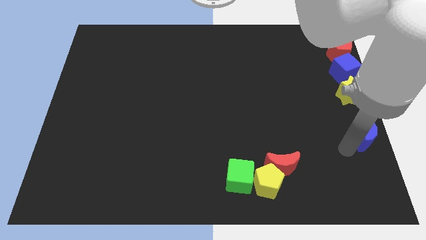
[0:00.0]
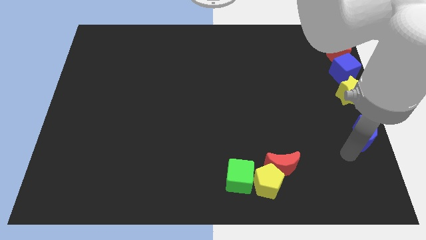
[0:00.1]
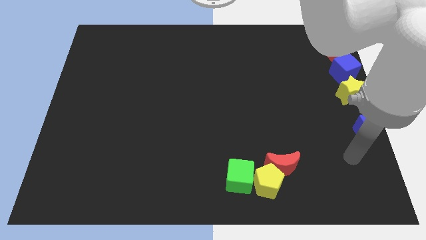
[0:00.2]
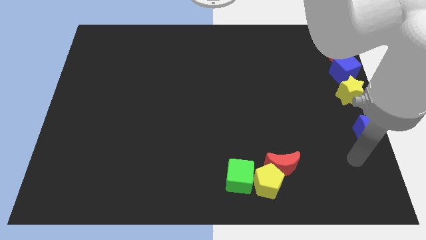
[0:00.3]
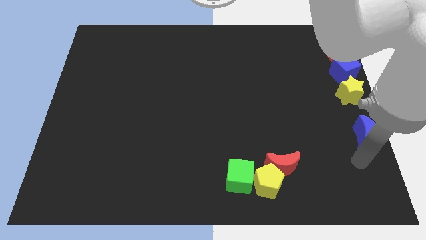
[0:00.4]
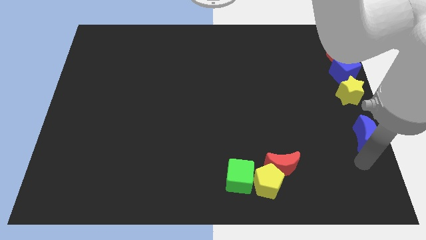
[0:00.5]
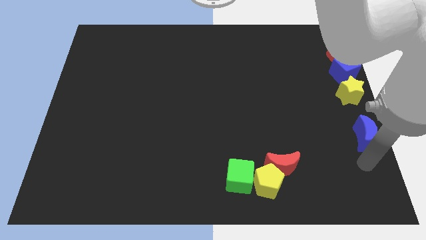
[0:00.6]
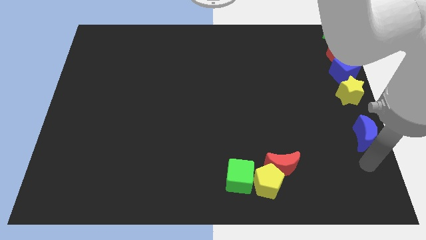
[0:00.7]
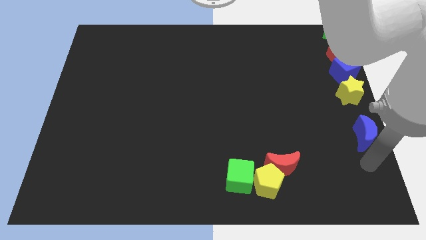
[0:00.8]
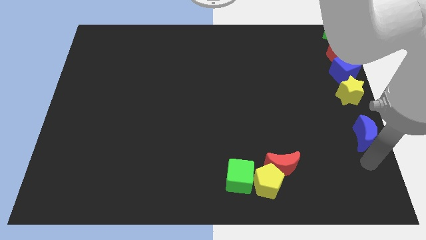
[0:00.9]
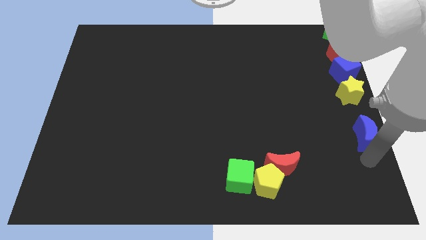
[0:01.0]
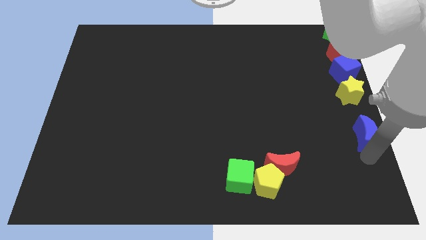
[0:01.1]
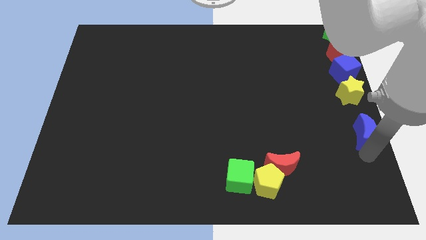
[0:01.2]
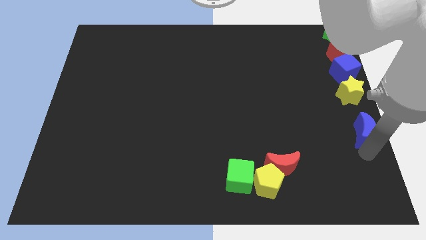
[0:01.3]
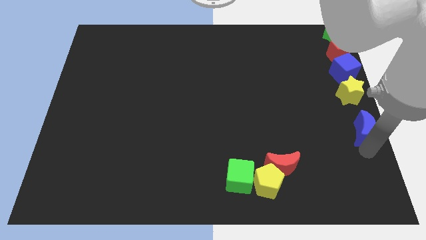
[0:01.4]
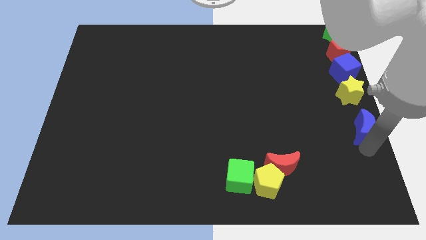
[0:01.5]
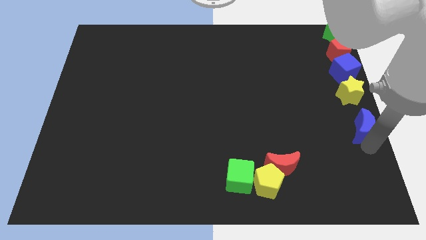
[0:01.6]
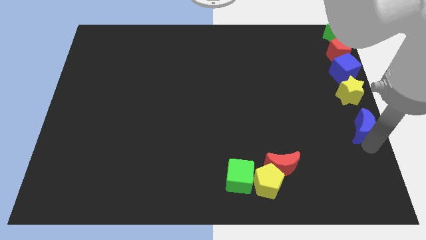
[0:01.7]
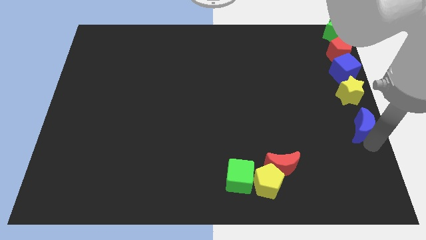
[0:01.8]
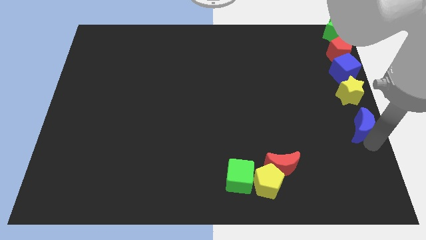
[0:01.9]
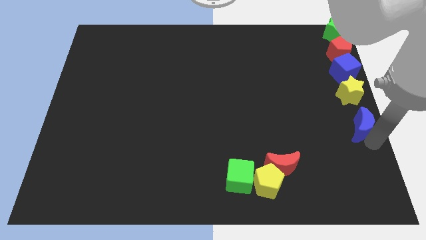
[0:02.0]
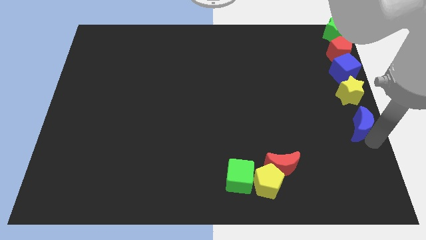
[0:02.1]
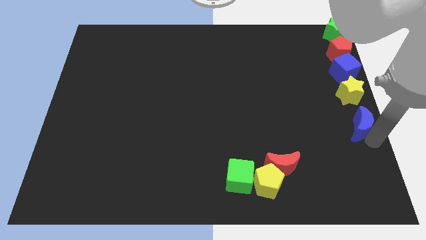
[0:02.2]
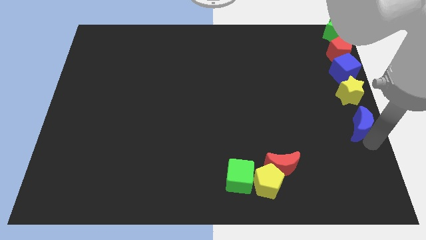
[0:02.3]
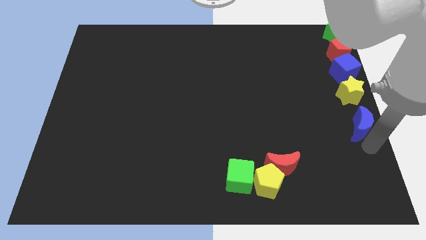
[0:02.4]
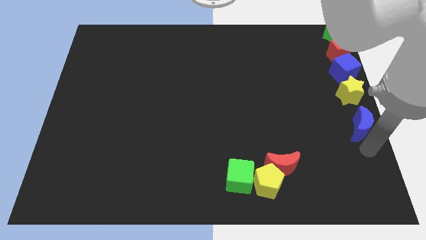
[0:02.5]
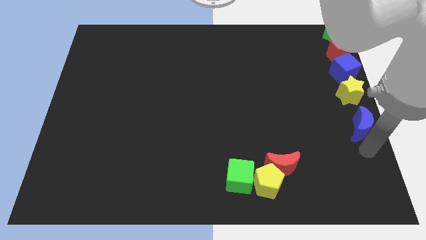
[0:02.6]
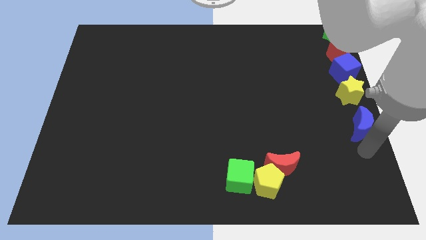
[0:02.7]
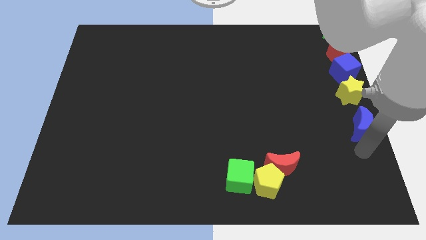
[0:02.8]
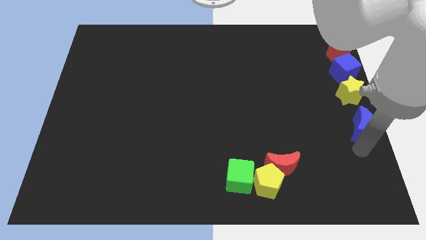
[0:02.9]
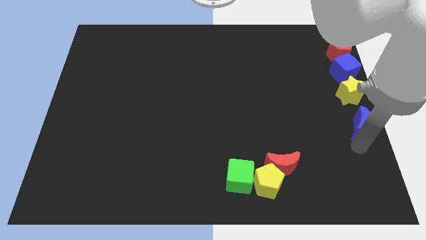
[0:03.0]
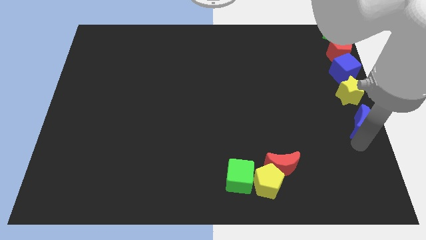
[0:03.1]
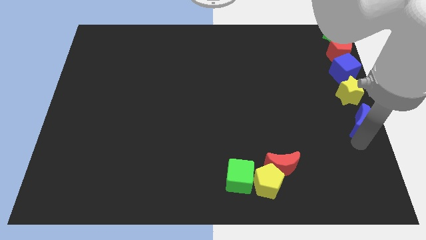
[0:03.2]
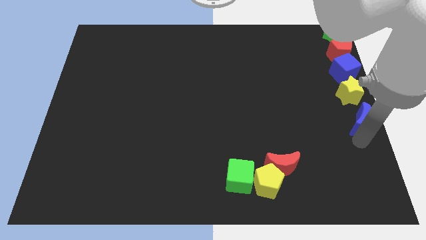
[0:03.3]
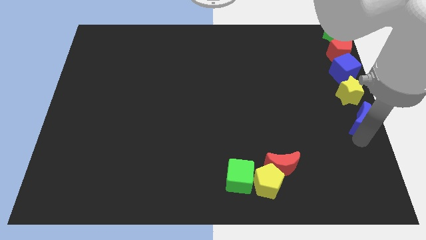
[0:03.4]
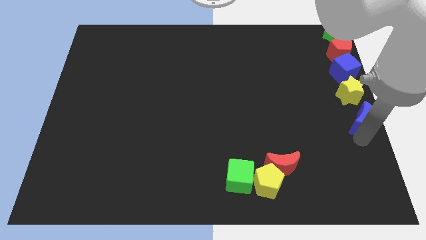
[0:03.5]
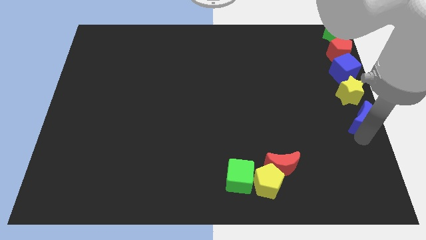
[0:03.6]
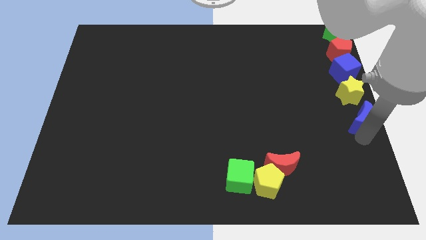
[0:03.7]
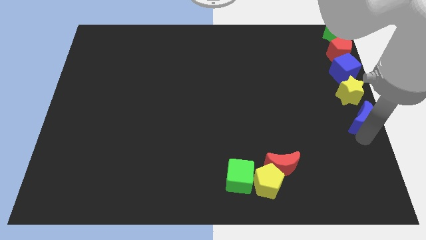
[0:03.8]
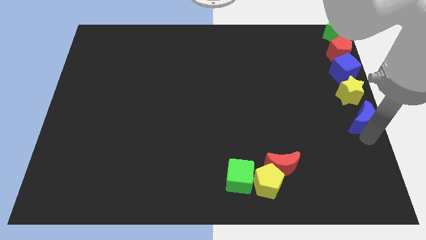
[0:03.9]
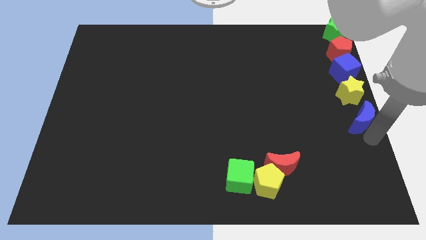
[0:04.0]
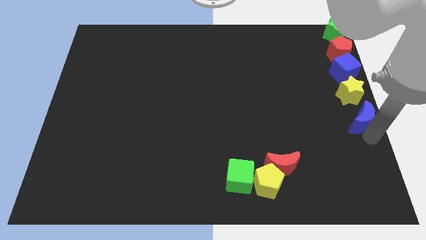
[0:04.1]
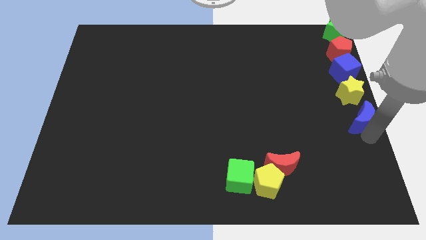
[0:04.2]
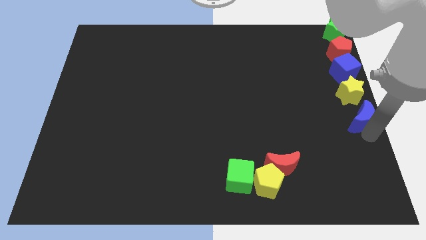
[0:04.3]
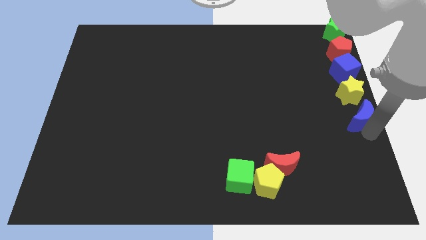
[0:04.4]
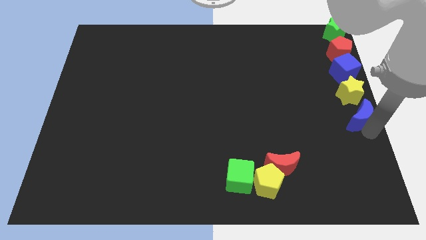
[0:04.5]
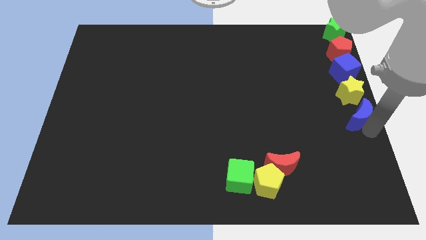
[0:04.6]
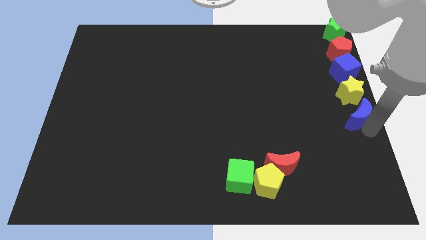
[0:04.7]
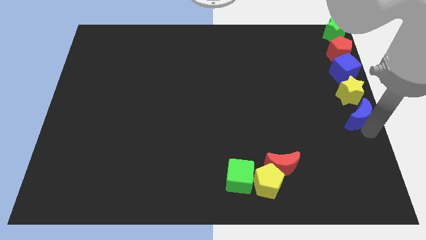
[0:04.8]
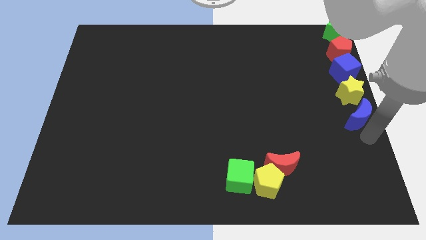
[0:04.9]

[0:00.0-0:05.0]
slightly move the blue moon to the bottom side of the yellow star

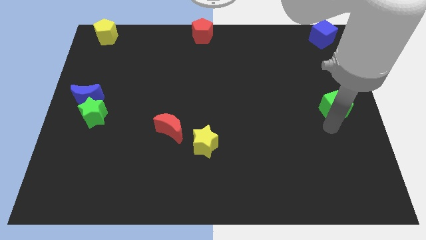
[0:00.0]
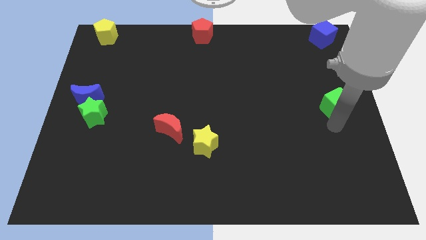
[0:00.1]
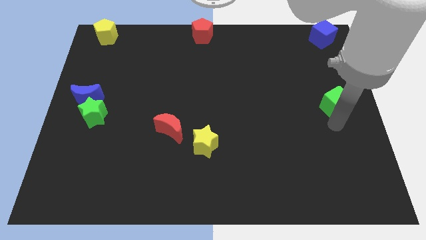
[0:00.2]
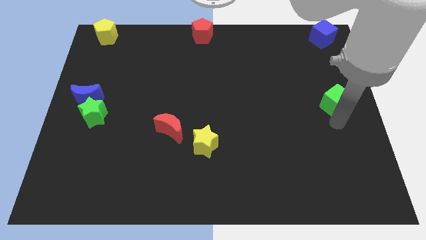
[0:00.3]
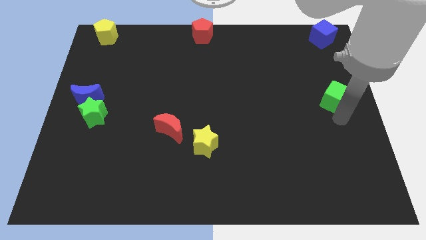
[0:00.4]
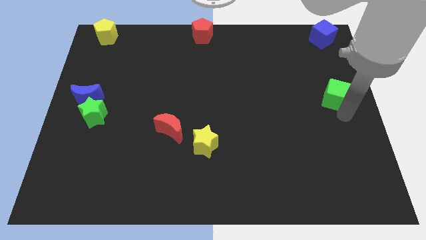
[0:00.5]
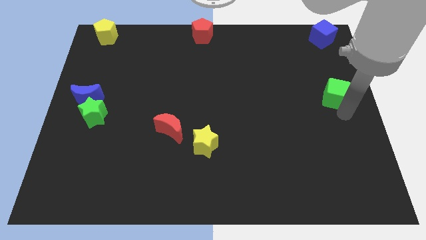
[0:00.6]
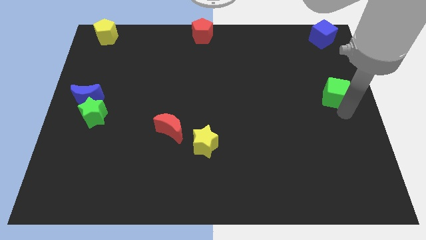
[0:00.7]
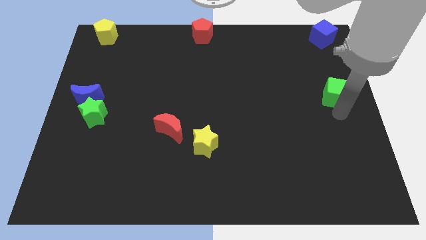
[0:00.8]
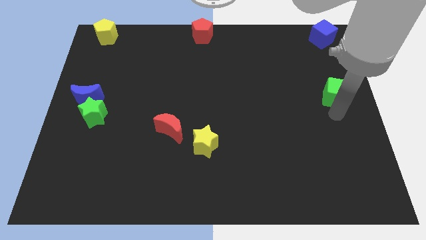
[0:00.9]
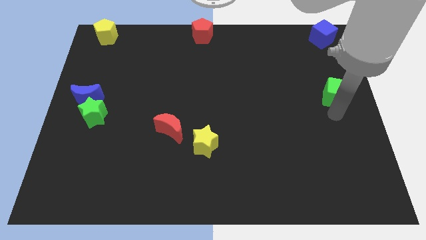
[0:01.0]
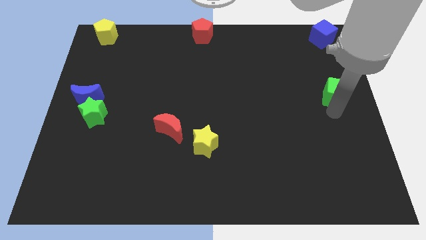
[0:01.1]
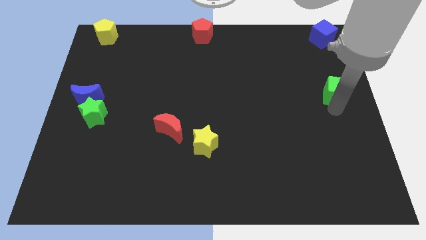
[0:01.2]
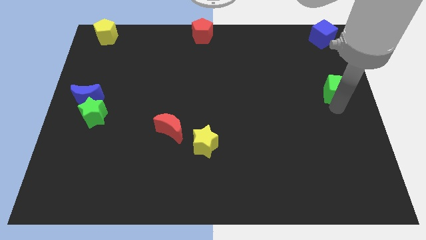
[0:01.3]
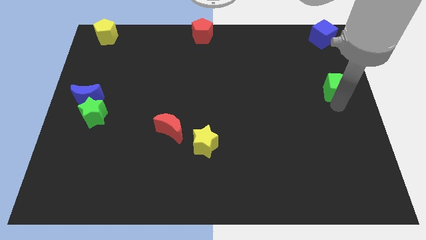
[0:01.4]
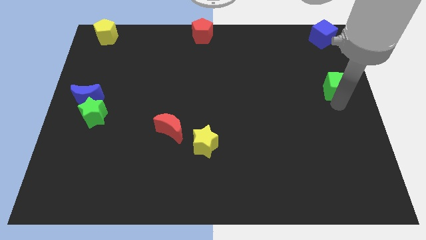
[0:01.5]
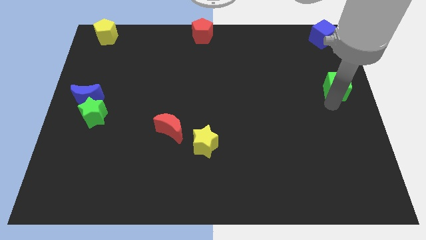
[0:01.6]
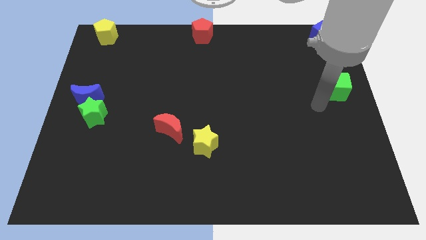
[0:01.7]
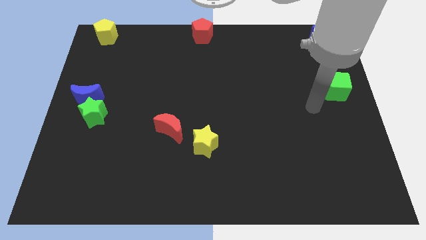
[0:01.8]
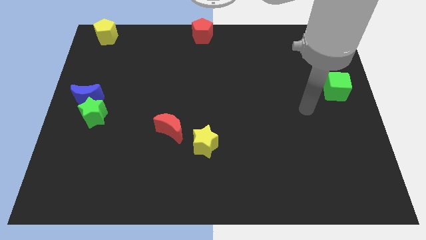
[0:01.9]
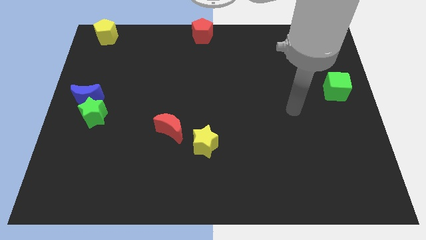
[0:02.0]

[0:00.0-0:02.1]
place the green cube near to the right center of the board

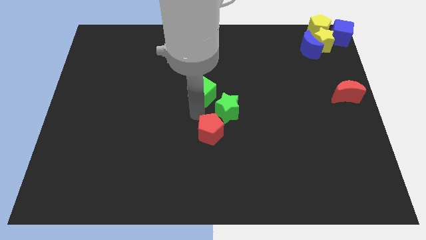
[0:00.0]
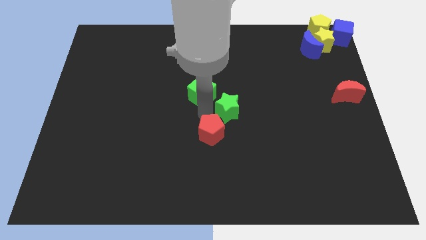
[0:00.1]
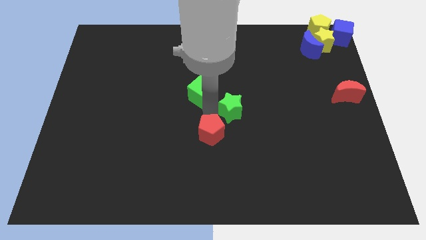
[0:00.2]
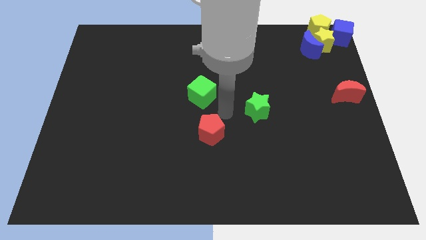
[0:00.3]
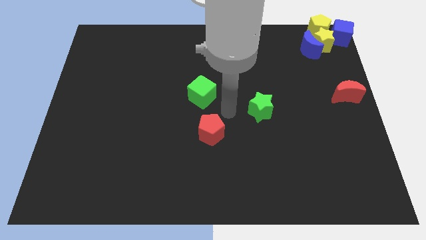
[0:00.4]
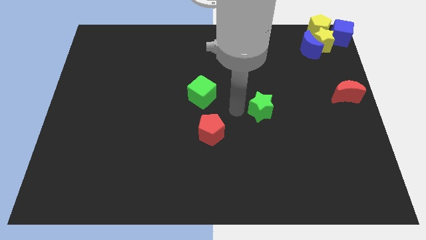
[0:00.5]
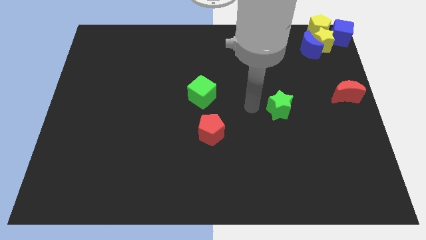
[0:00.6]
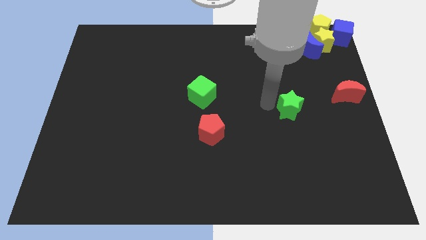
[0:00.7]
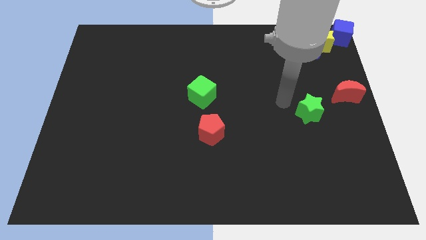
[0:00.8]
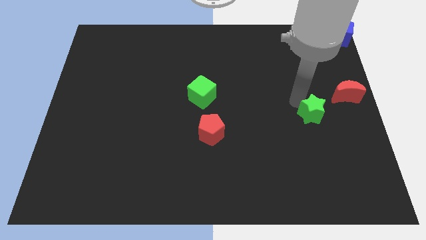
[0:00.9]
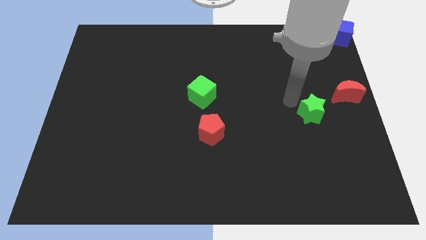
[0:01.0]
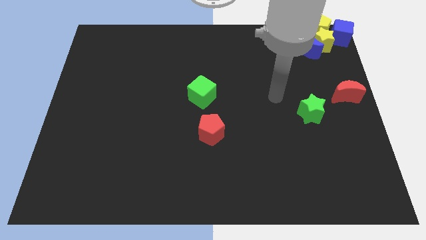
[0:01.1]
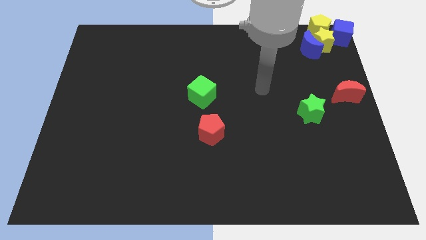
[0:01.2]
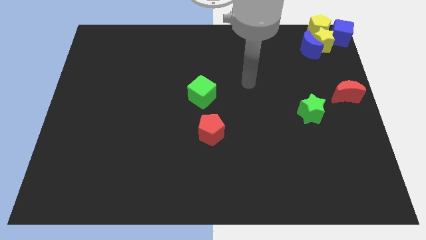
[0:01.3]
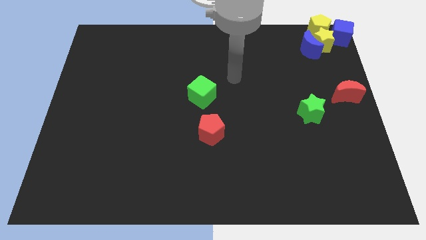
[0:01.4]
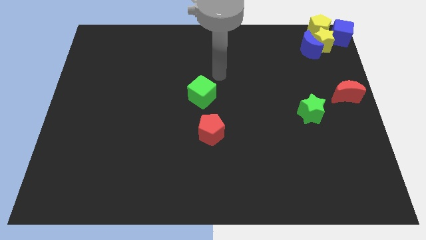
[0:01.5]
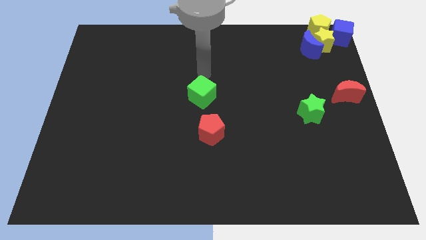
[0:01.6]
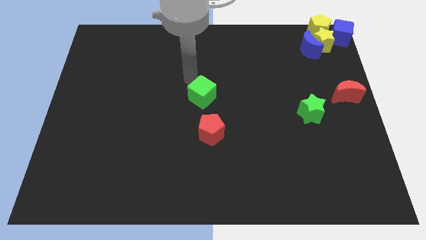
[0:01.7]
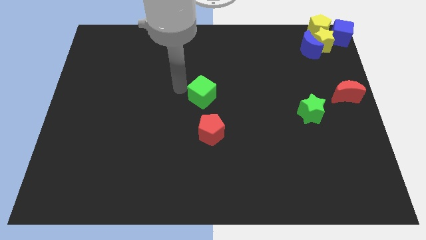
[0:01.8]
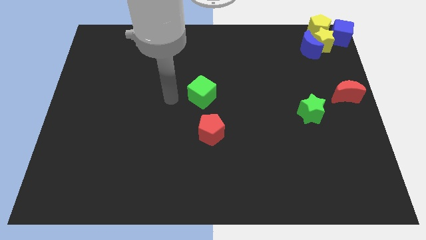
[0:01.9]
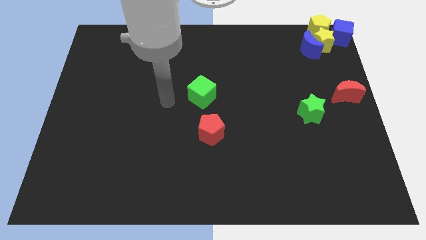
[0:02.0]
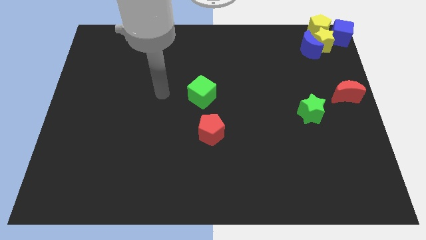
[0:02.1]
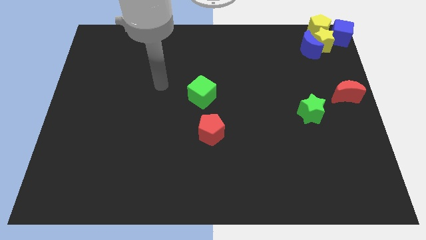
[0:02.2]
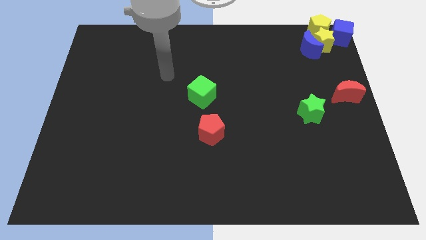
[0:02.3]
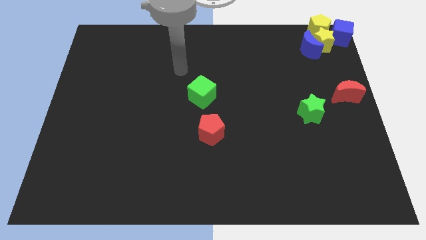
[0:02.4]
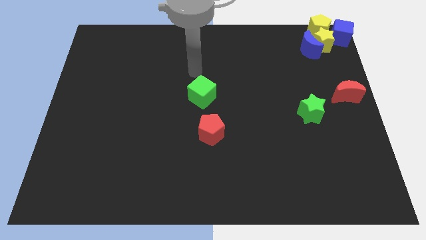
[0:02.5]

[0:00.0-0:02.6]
move green star from red pentagon and green cube
